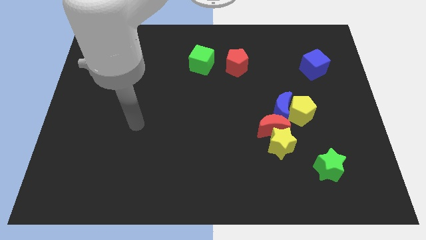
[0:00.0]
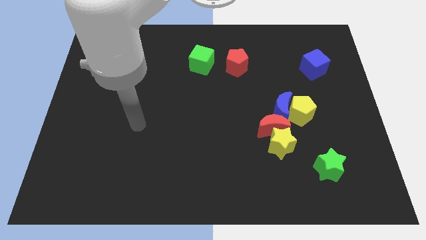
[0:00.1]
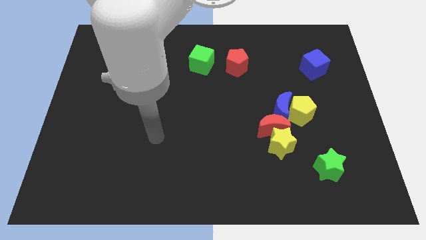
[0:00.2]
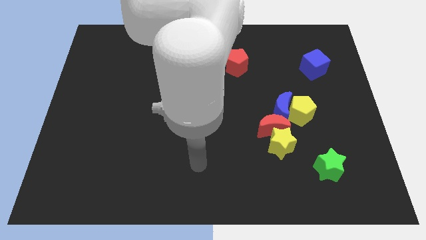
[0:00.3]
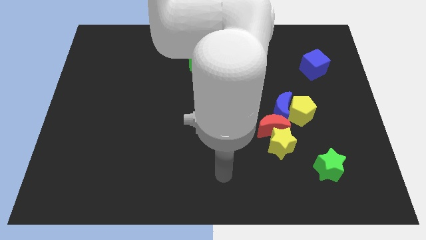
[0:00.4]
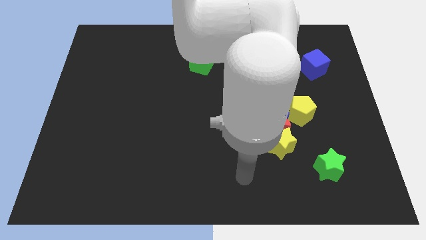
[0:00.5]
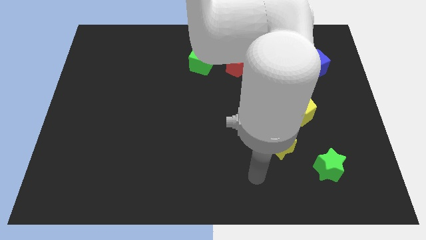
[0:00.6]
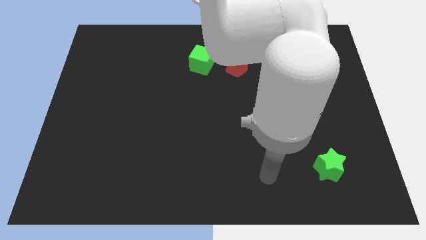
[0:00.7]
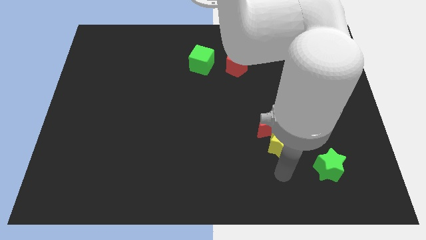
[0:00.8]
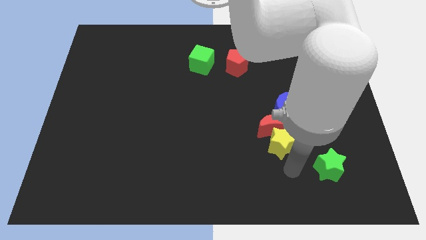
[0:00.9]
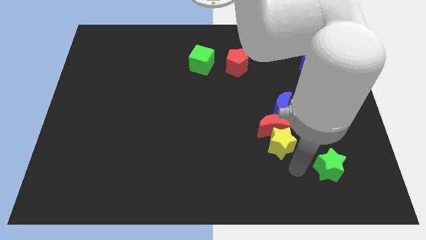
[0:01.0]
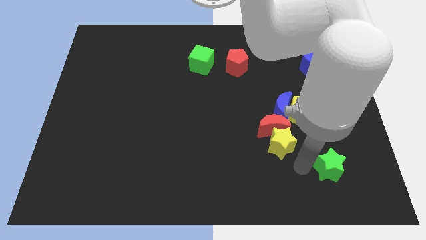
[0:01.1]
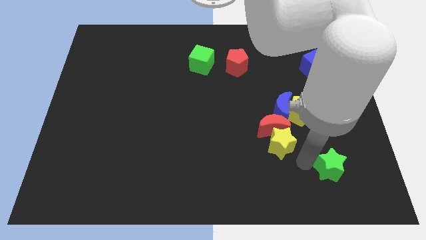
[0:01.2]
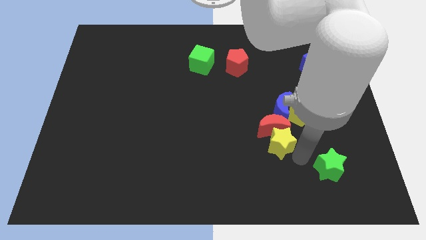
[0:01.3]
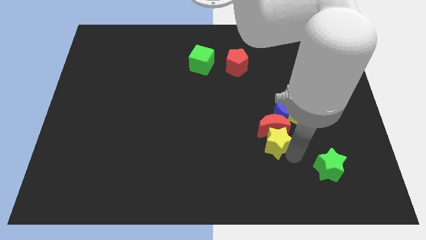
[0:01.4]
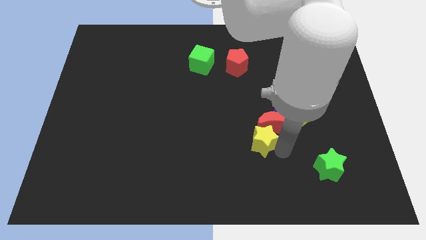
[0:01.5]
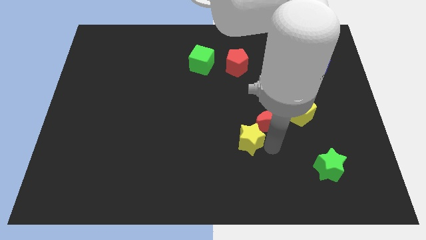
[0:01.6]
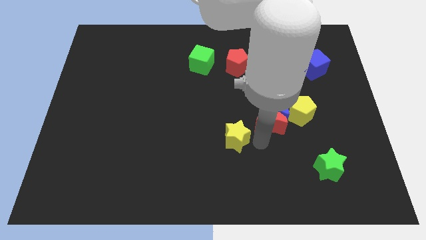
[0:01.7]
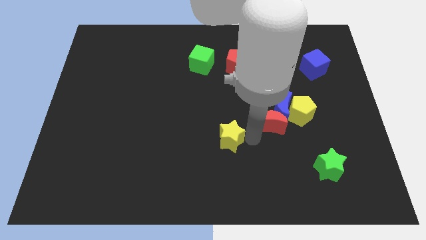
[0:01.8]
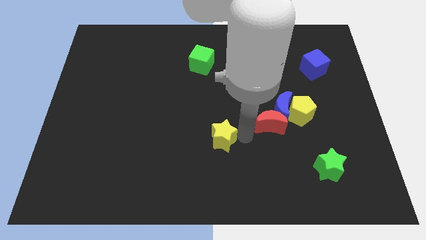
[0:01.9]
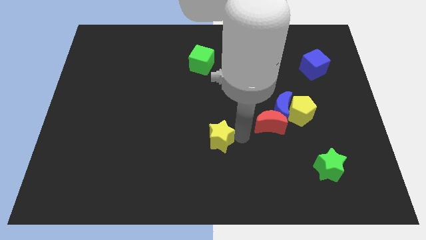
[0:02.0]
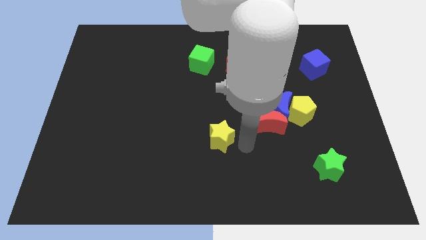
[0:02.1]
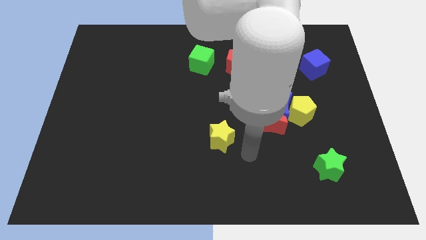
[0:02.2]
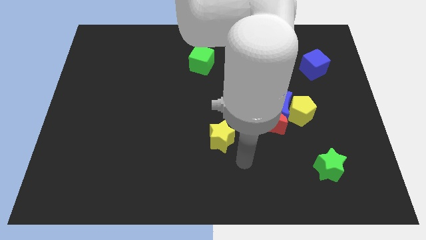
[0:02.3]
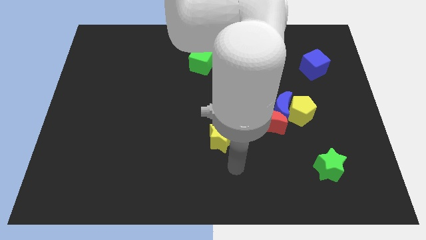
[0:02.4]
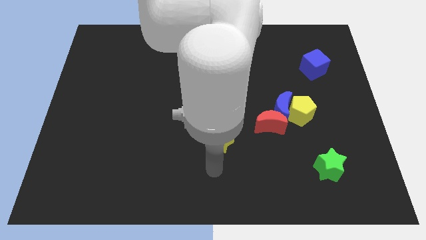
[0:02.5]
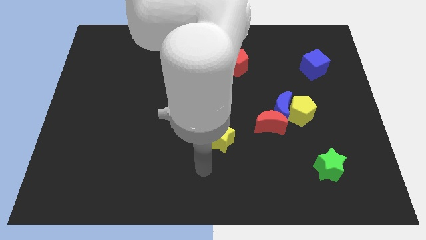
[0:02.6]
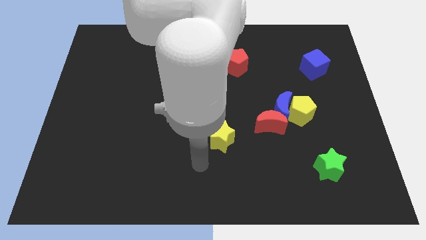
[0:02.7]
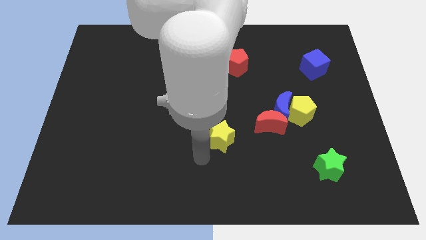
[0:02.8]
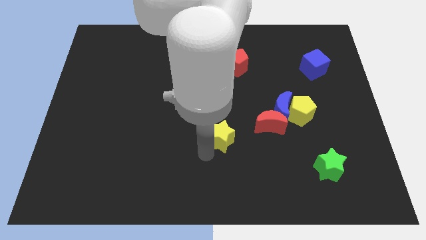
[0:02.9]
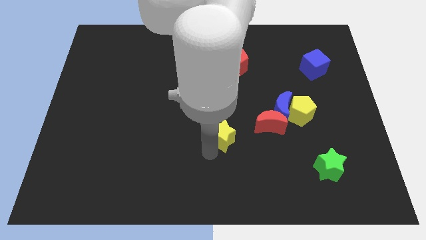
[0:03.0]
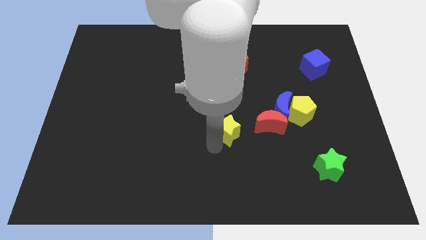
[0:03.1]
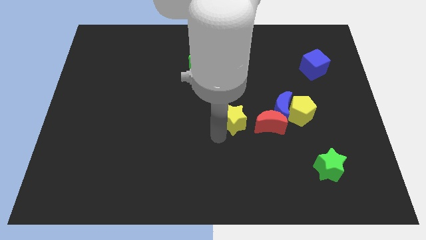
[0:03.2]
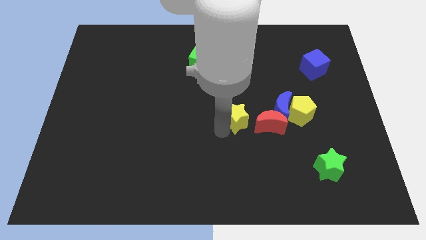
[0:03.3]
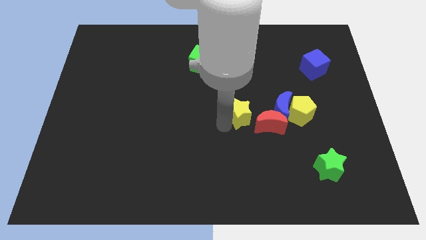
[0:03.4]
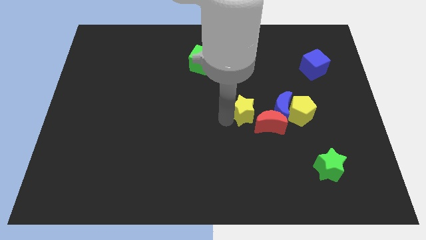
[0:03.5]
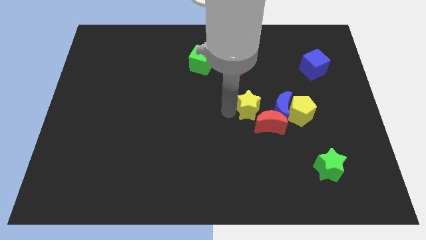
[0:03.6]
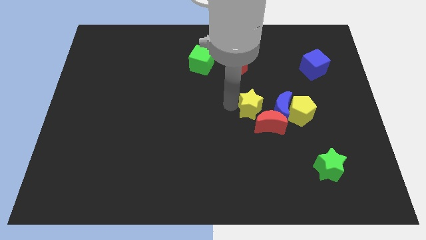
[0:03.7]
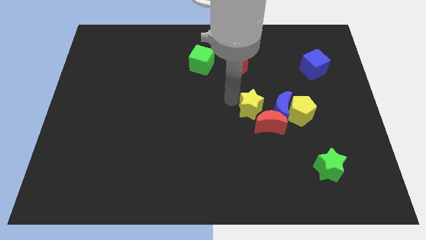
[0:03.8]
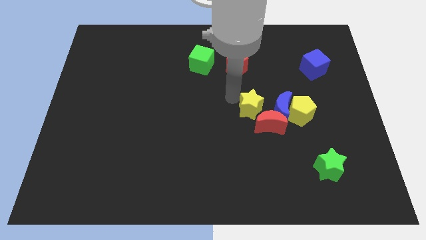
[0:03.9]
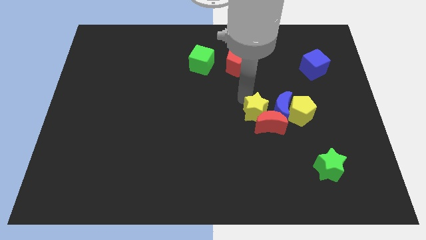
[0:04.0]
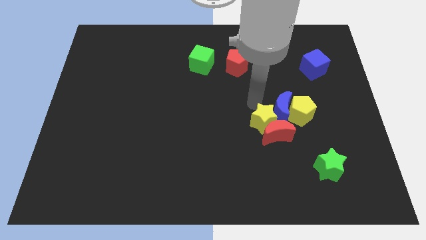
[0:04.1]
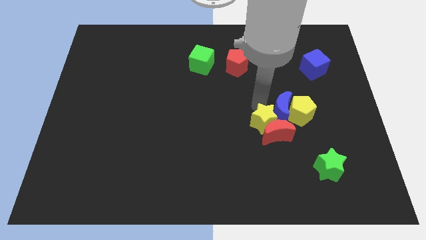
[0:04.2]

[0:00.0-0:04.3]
put the yellow star to the blue moon

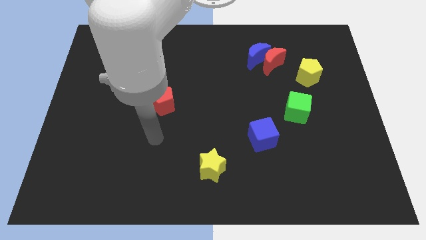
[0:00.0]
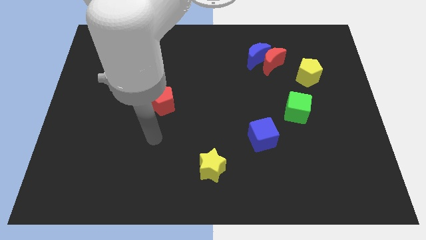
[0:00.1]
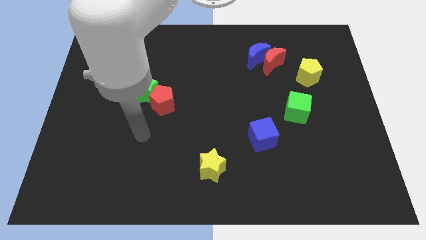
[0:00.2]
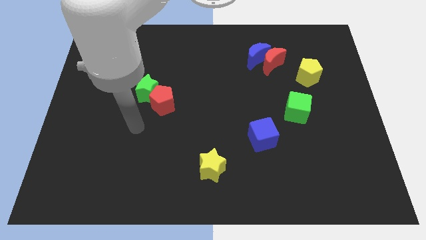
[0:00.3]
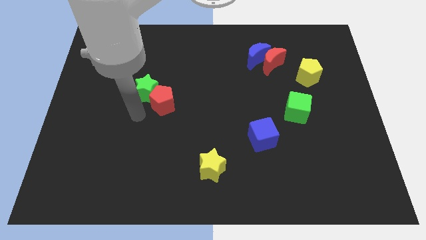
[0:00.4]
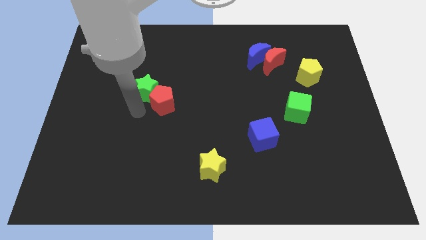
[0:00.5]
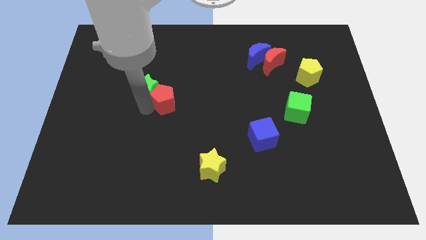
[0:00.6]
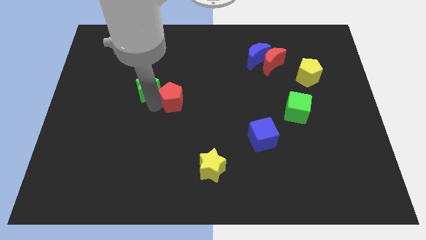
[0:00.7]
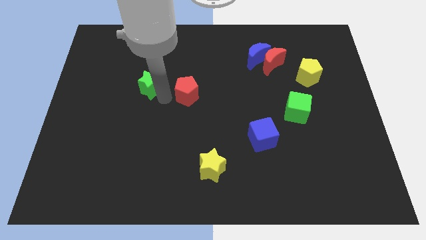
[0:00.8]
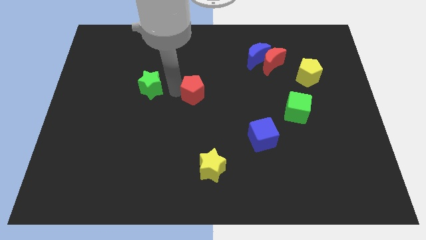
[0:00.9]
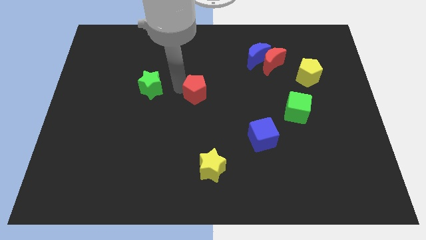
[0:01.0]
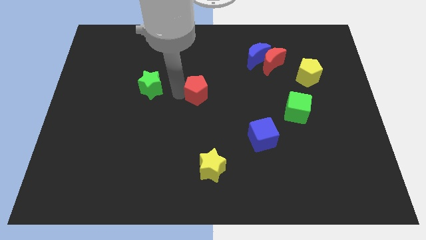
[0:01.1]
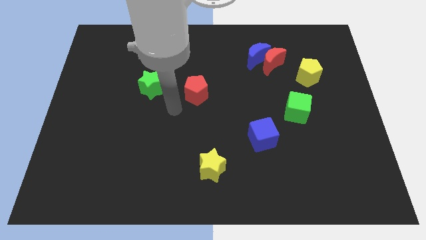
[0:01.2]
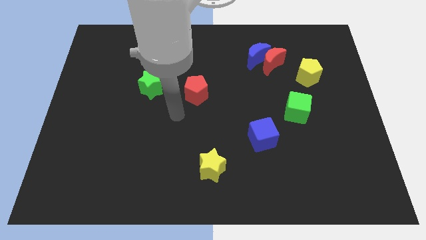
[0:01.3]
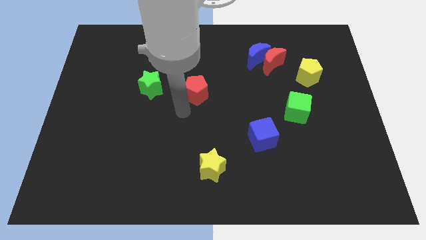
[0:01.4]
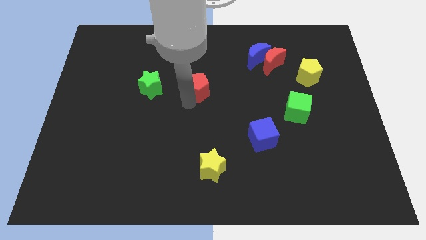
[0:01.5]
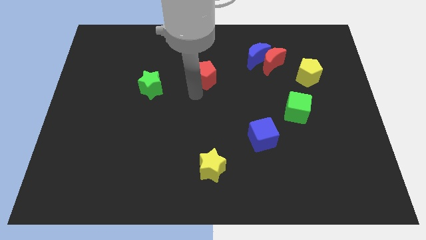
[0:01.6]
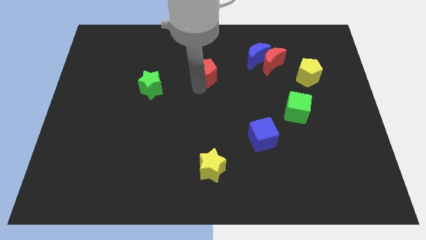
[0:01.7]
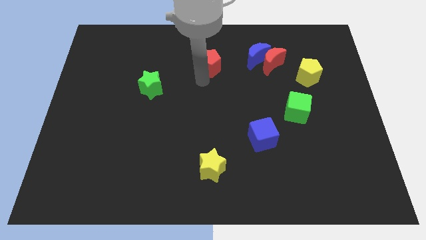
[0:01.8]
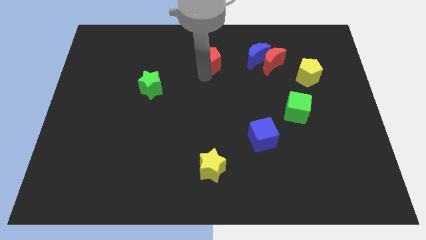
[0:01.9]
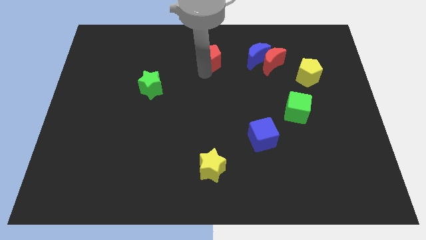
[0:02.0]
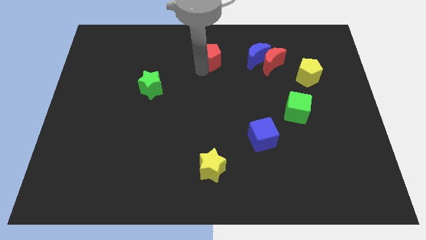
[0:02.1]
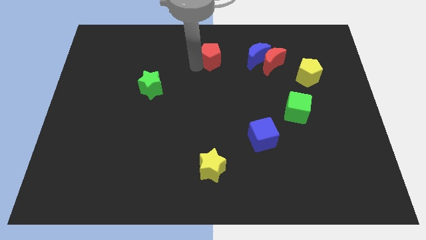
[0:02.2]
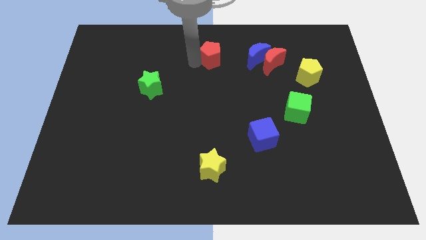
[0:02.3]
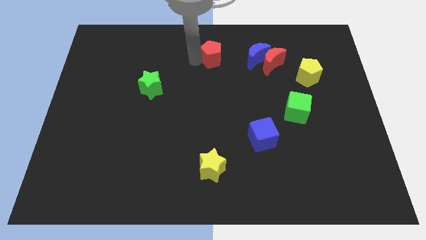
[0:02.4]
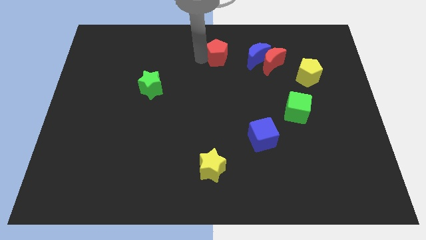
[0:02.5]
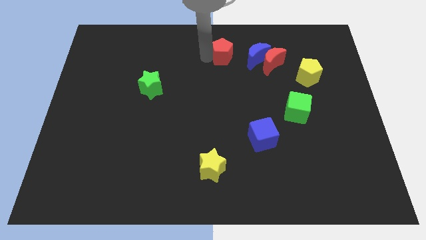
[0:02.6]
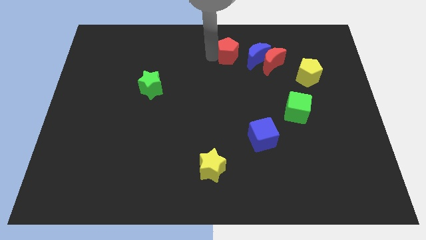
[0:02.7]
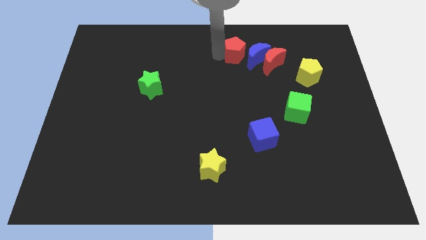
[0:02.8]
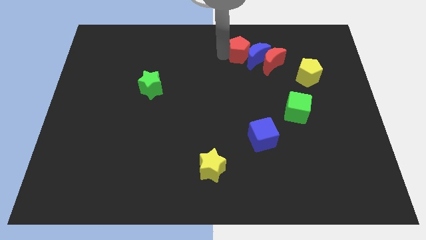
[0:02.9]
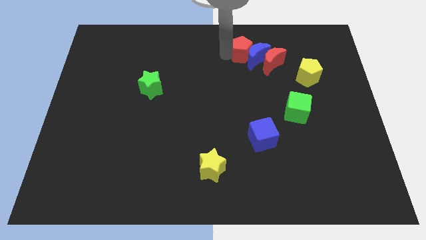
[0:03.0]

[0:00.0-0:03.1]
move the red pentagon to the blue moon

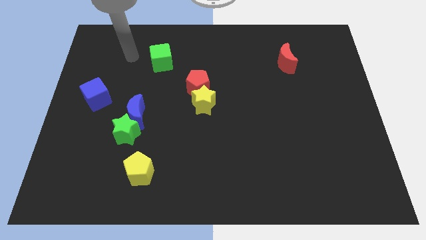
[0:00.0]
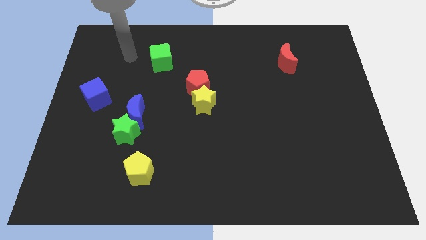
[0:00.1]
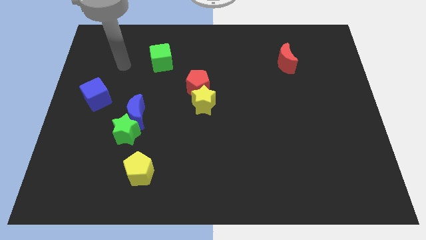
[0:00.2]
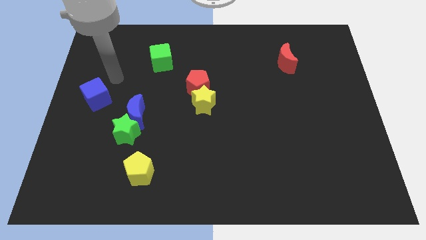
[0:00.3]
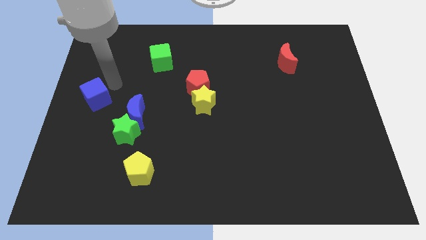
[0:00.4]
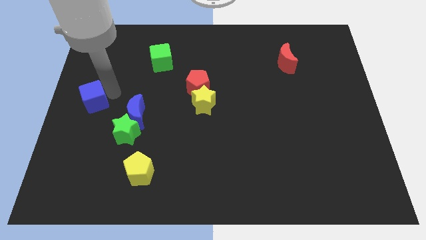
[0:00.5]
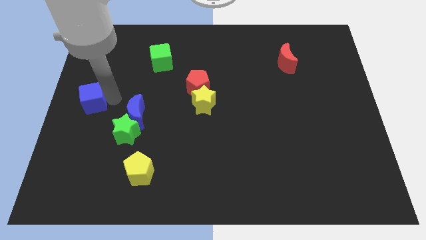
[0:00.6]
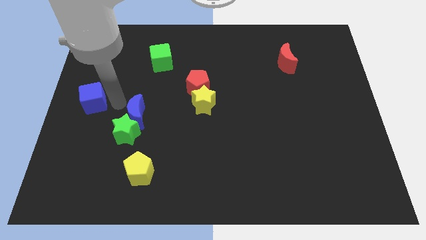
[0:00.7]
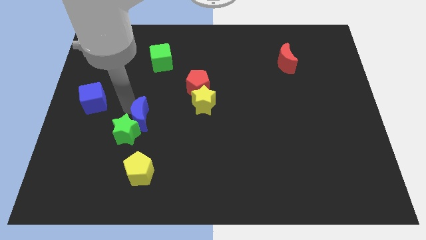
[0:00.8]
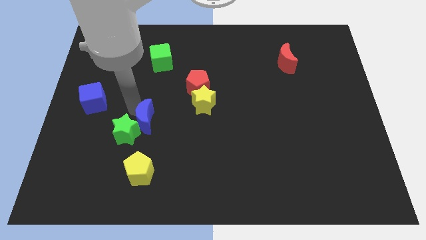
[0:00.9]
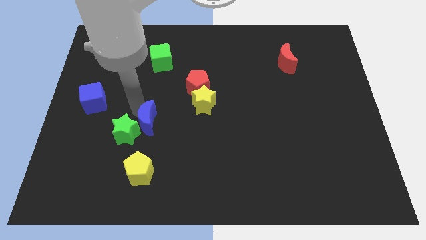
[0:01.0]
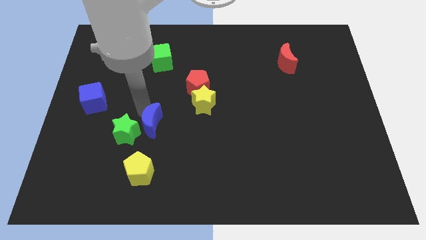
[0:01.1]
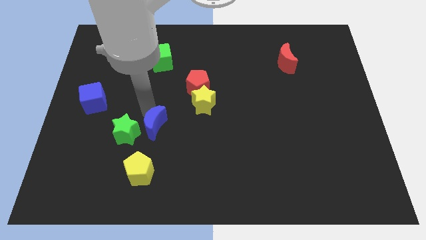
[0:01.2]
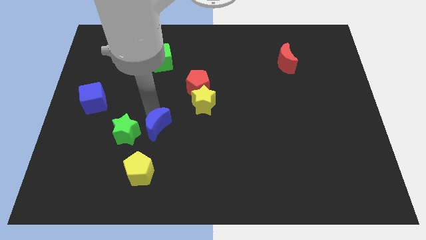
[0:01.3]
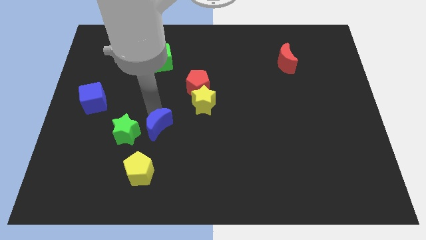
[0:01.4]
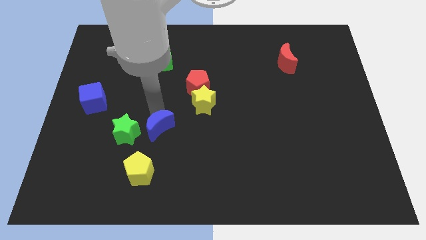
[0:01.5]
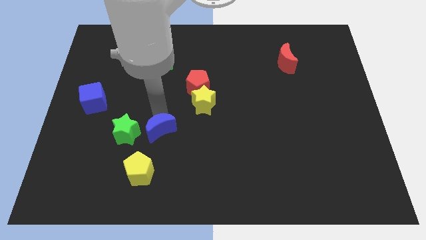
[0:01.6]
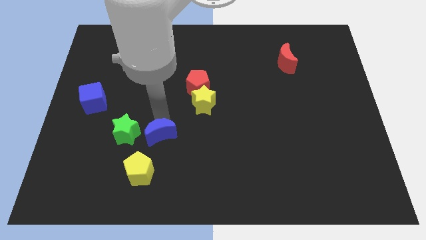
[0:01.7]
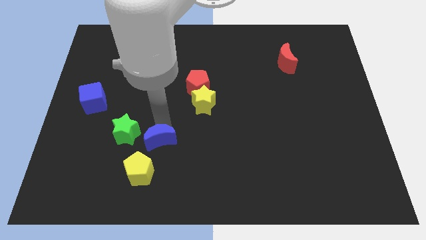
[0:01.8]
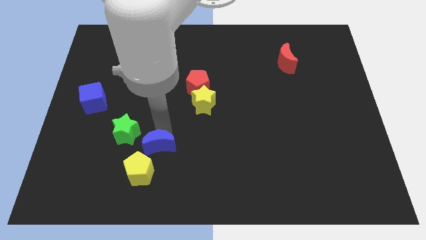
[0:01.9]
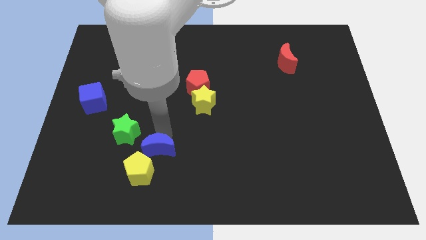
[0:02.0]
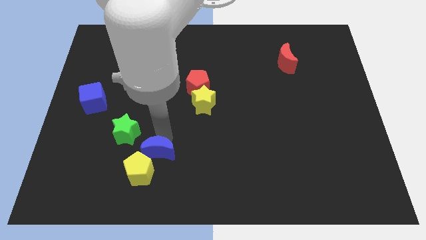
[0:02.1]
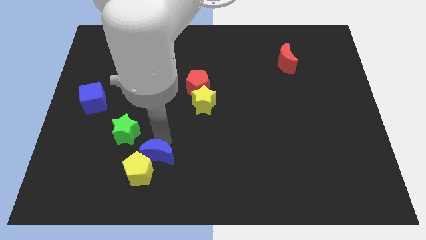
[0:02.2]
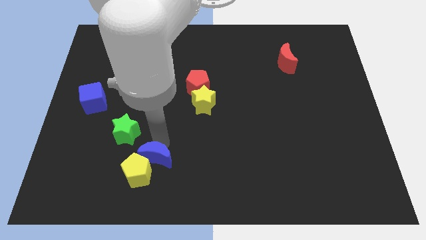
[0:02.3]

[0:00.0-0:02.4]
put the blue moon to the yellow pentagon
